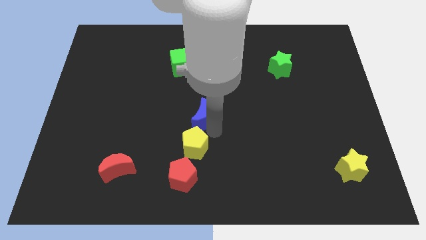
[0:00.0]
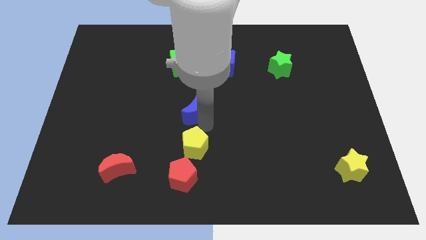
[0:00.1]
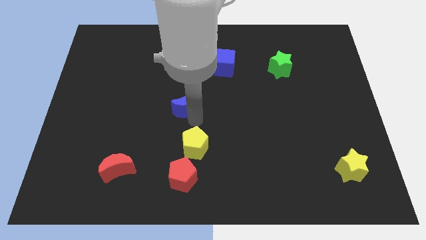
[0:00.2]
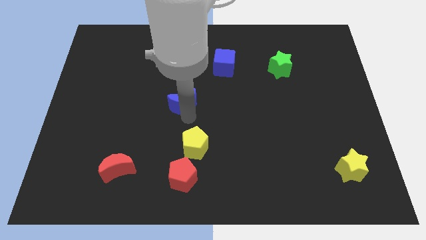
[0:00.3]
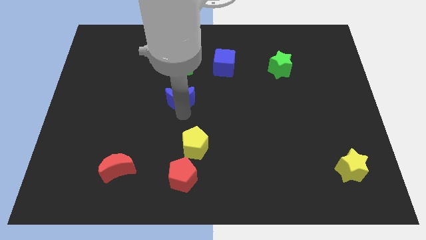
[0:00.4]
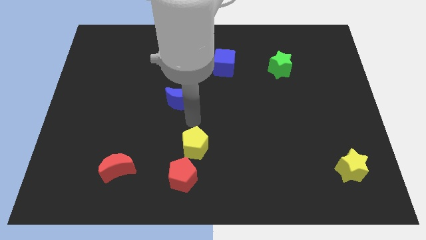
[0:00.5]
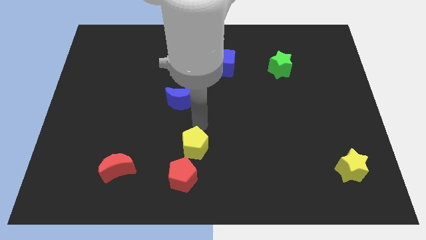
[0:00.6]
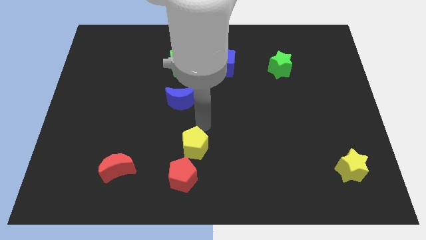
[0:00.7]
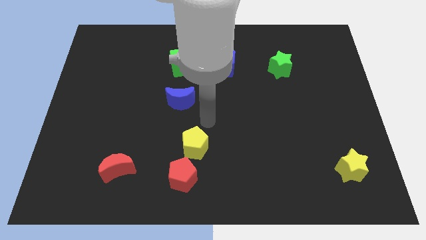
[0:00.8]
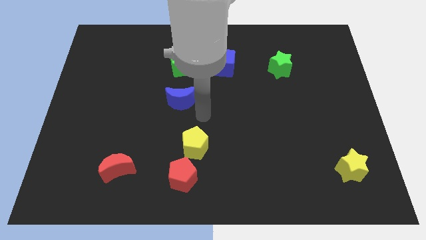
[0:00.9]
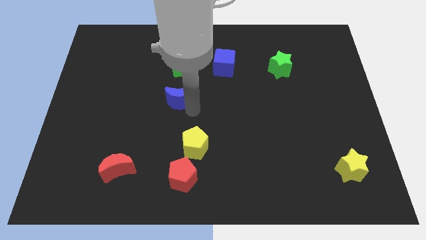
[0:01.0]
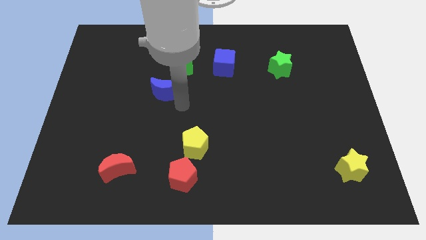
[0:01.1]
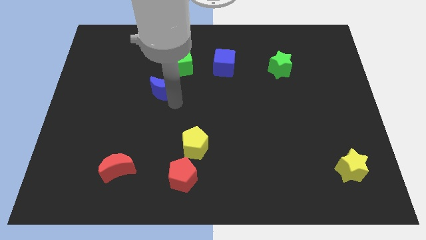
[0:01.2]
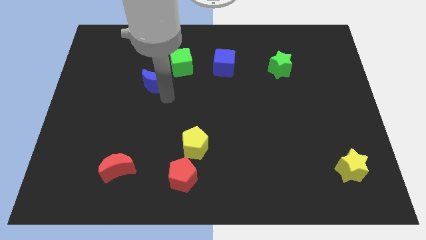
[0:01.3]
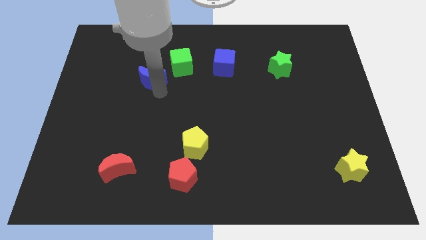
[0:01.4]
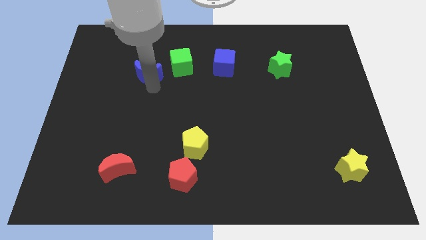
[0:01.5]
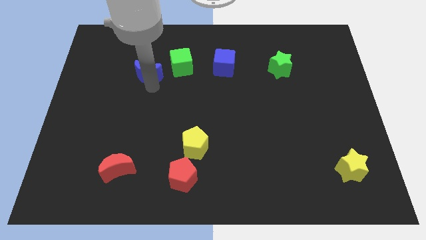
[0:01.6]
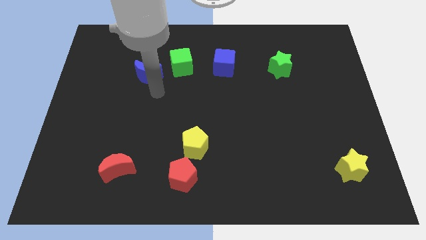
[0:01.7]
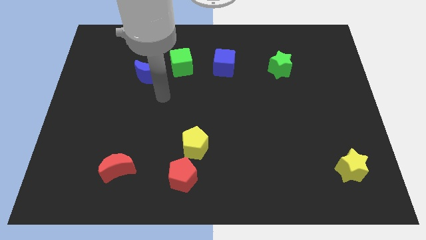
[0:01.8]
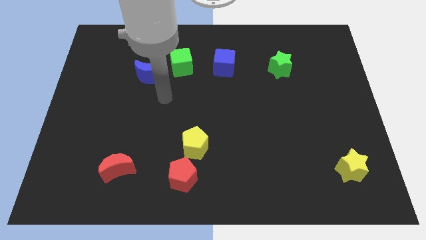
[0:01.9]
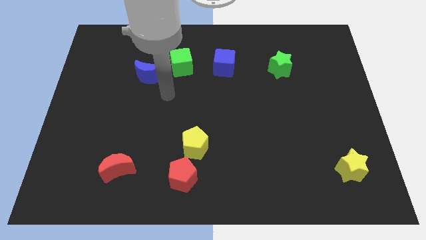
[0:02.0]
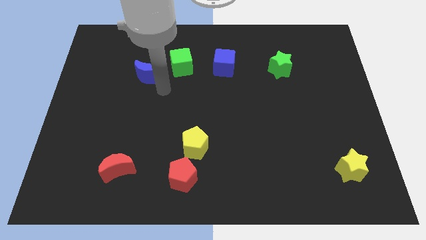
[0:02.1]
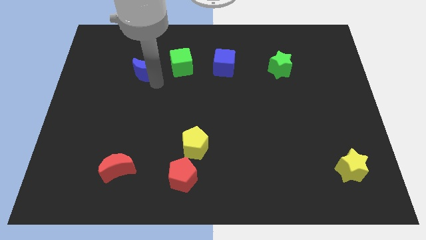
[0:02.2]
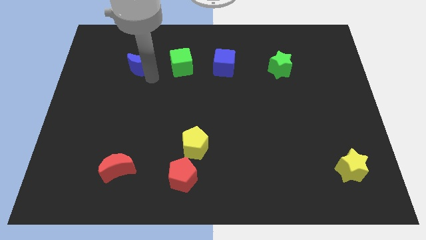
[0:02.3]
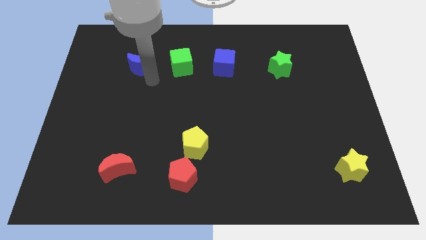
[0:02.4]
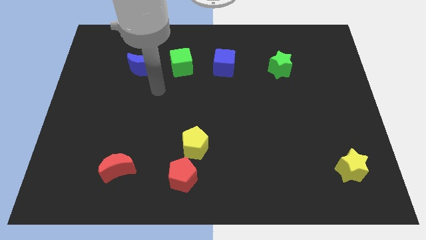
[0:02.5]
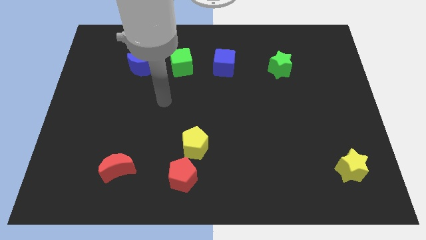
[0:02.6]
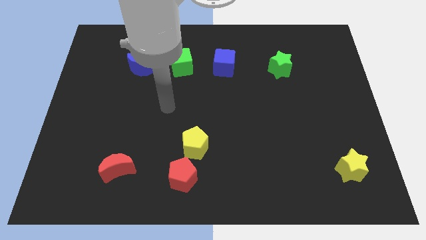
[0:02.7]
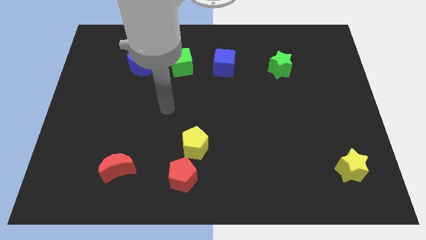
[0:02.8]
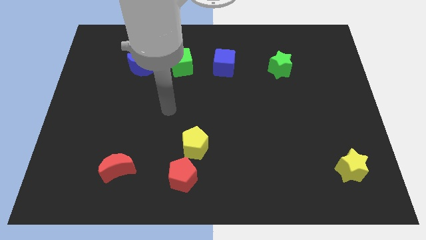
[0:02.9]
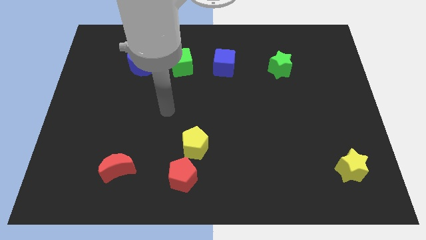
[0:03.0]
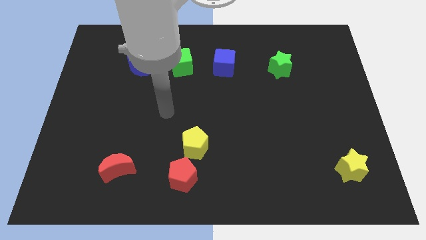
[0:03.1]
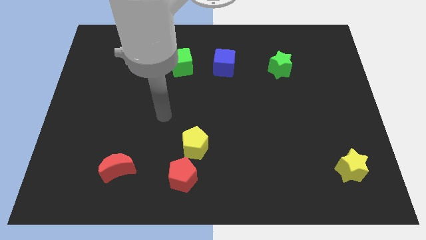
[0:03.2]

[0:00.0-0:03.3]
move the blue moon parallel left to the green cube

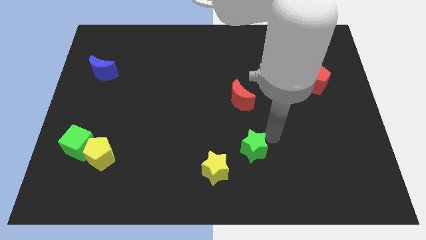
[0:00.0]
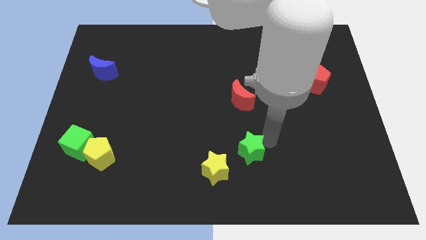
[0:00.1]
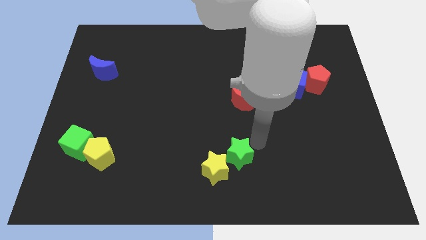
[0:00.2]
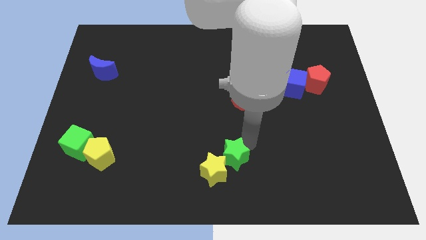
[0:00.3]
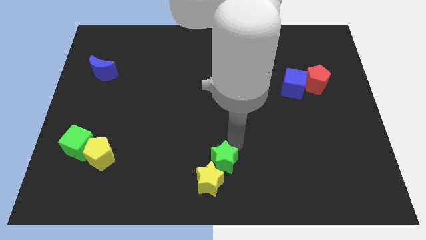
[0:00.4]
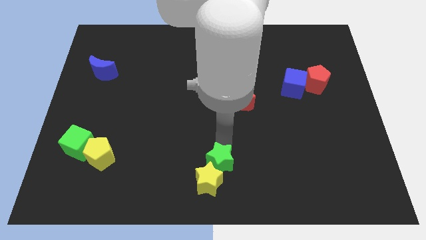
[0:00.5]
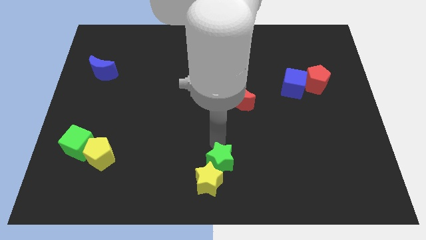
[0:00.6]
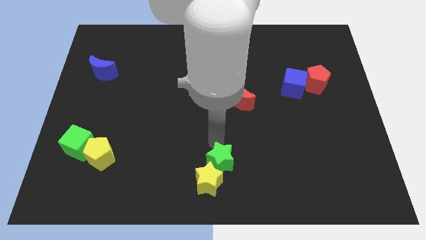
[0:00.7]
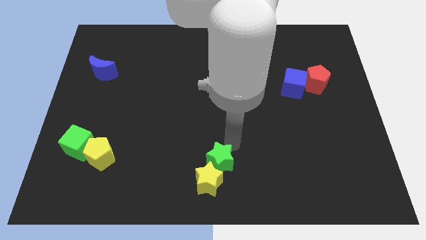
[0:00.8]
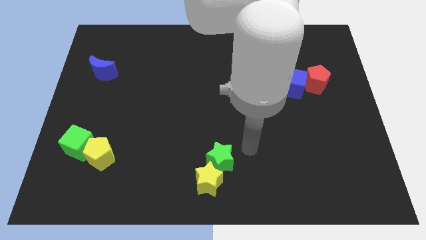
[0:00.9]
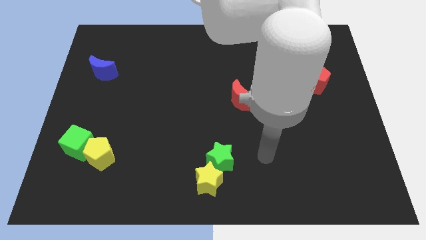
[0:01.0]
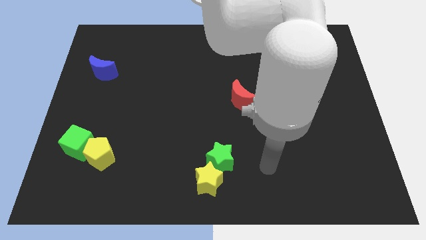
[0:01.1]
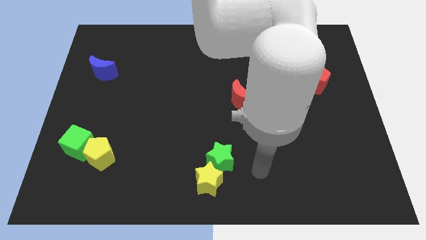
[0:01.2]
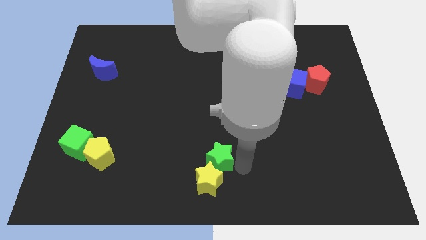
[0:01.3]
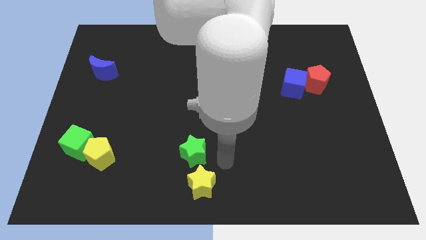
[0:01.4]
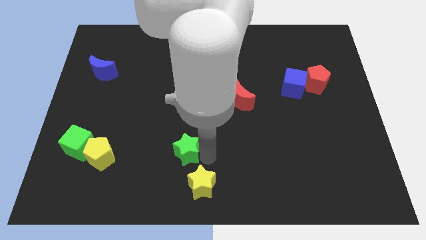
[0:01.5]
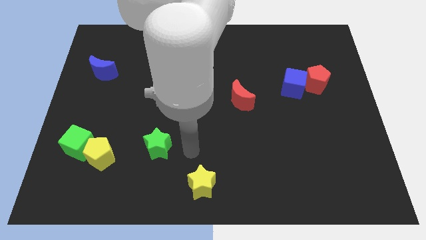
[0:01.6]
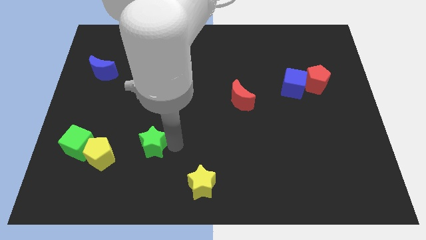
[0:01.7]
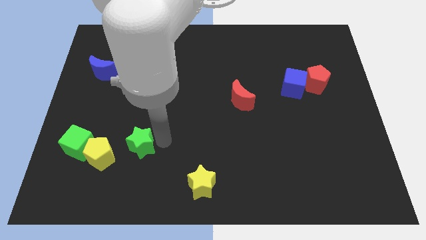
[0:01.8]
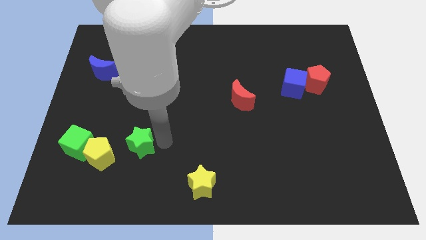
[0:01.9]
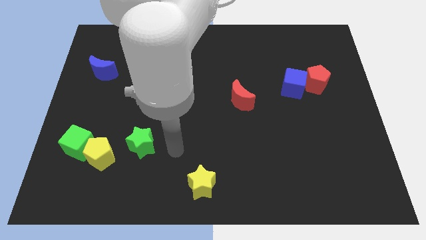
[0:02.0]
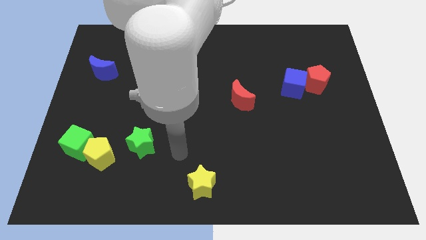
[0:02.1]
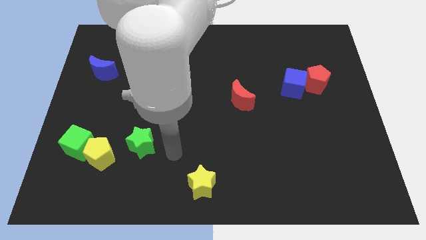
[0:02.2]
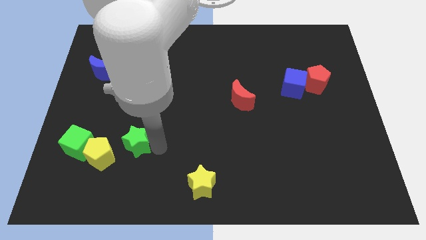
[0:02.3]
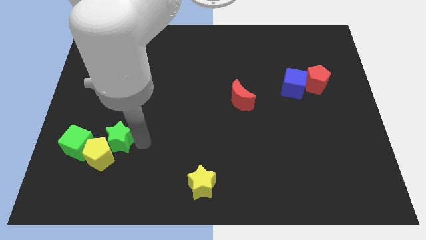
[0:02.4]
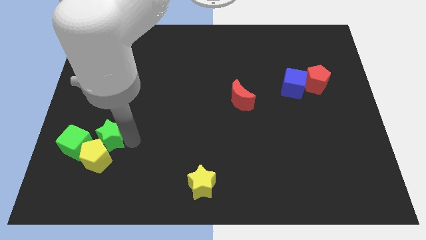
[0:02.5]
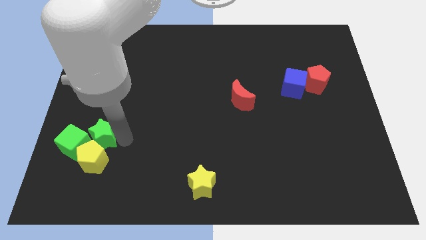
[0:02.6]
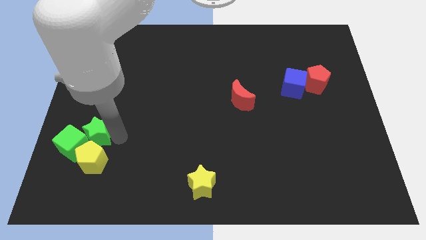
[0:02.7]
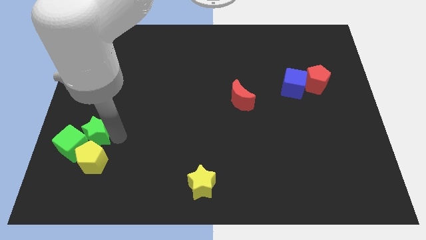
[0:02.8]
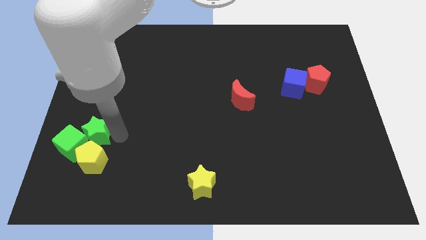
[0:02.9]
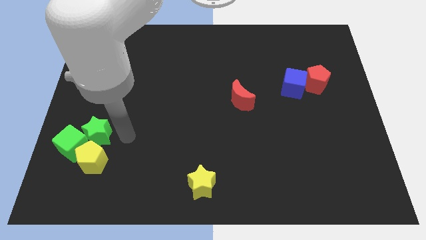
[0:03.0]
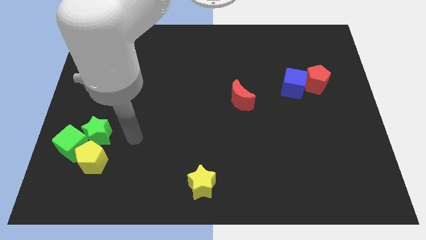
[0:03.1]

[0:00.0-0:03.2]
place the green star on top of the green cube

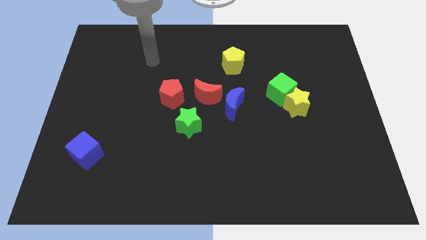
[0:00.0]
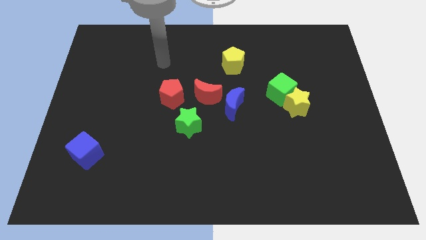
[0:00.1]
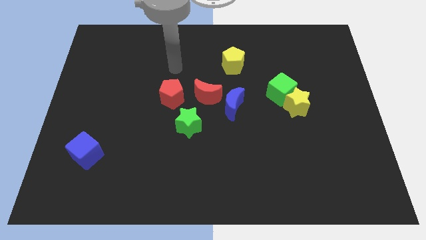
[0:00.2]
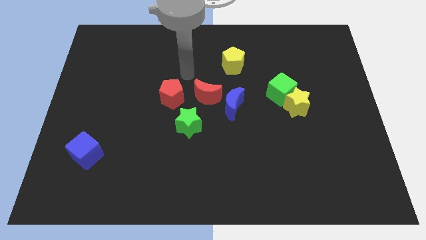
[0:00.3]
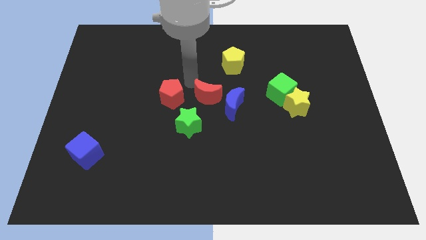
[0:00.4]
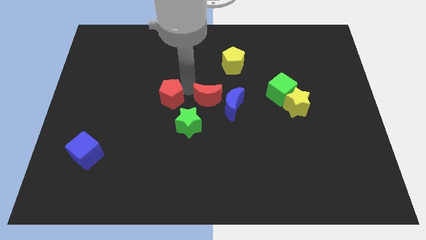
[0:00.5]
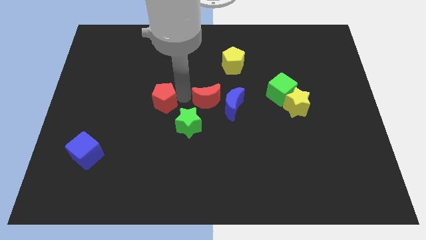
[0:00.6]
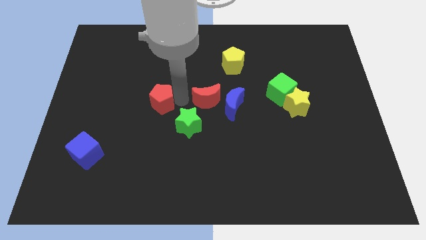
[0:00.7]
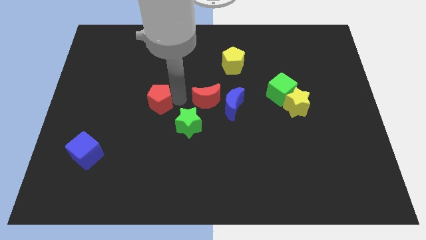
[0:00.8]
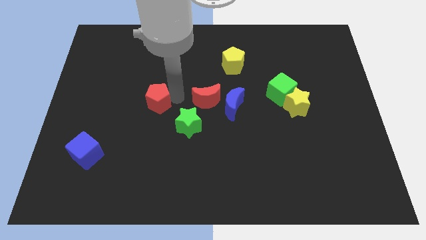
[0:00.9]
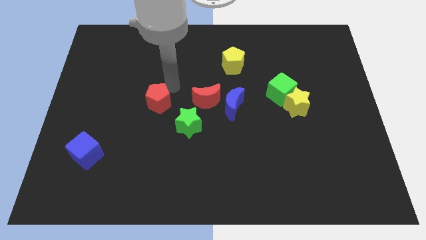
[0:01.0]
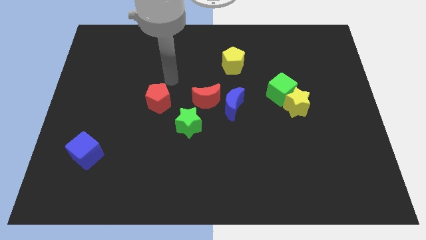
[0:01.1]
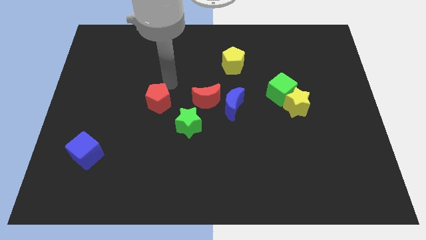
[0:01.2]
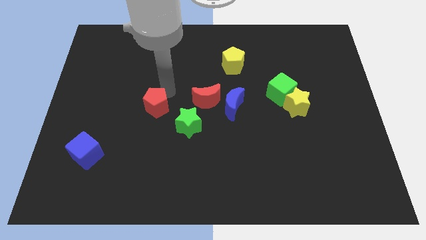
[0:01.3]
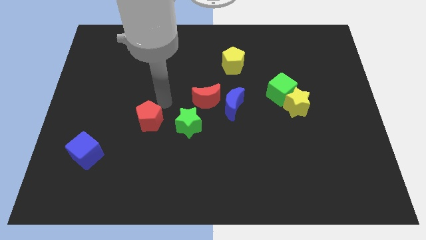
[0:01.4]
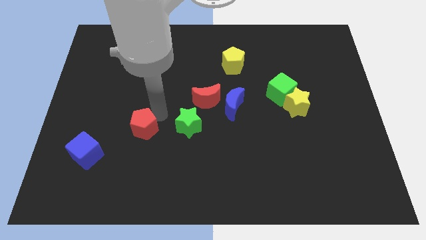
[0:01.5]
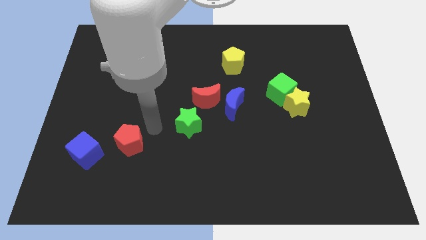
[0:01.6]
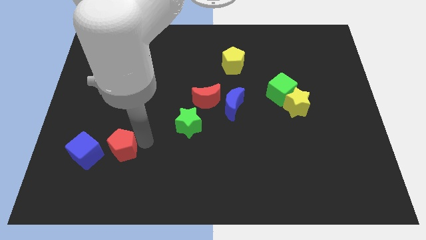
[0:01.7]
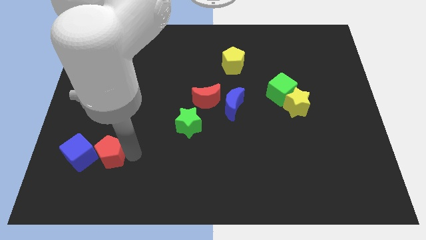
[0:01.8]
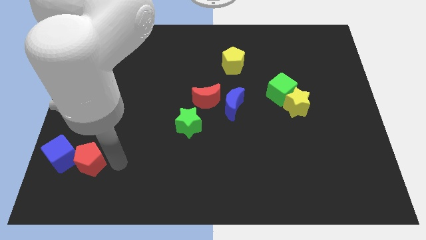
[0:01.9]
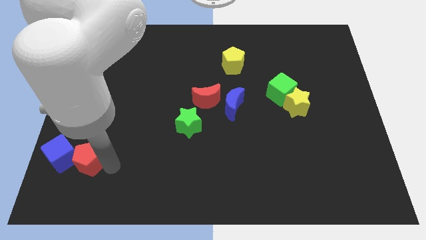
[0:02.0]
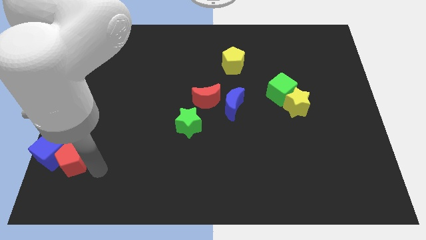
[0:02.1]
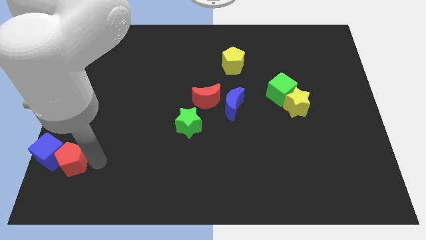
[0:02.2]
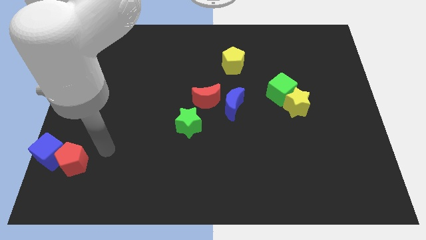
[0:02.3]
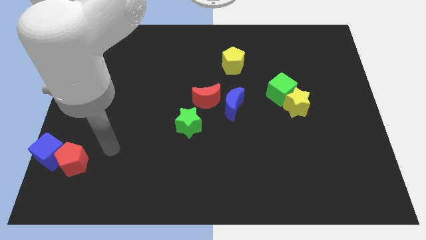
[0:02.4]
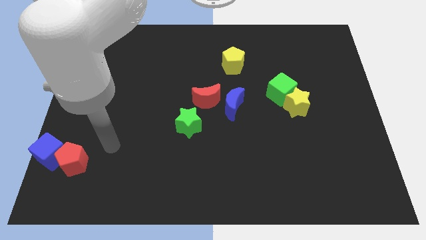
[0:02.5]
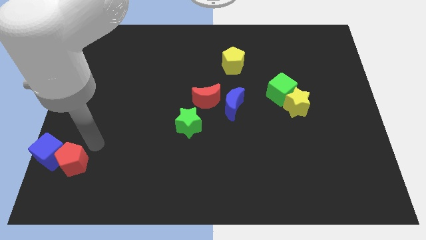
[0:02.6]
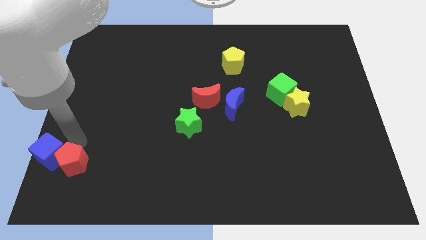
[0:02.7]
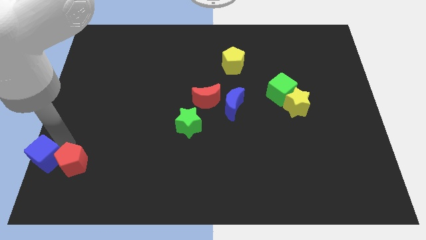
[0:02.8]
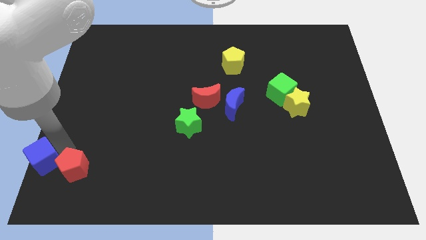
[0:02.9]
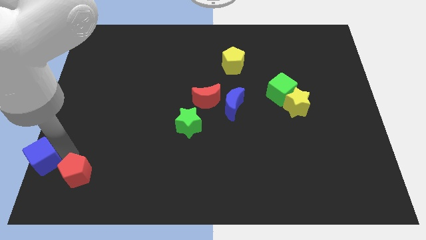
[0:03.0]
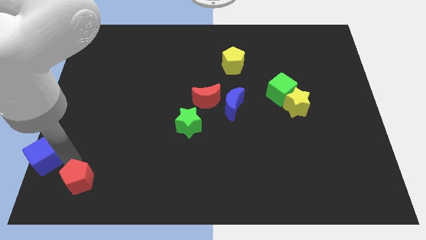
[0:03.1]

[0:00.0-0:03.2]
push the red pentagon towards the blue cube
